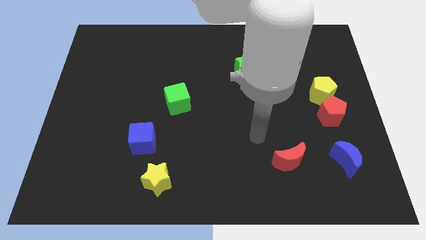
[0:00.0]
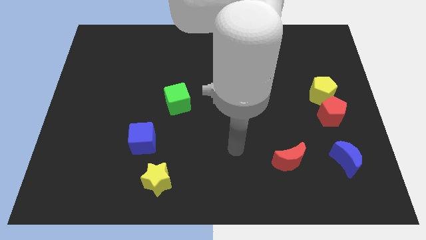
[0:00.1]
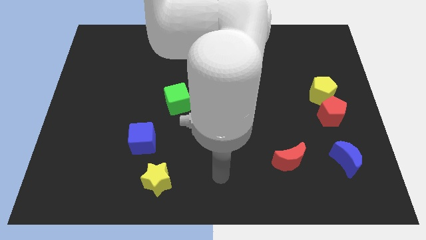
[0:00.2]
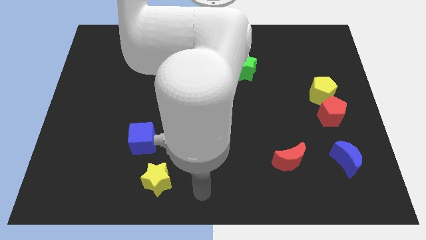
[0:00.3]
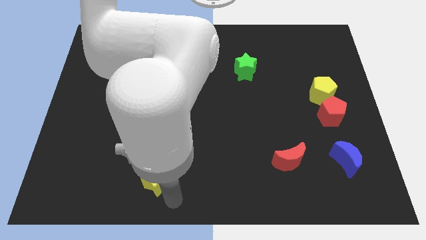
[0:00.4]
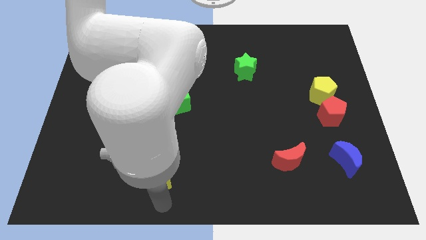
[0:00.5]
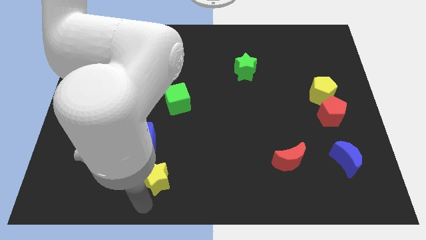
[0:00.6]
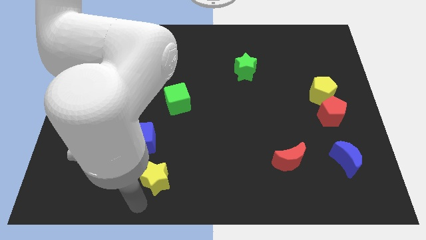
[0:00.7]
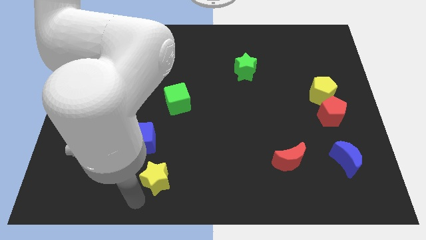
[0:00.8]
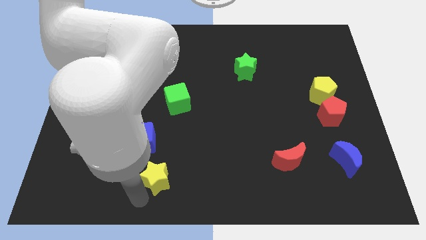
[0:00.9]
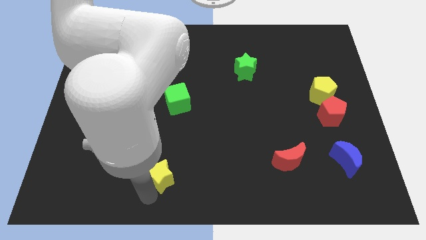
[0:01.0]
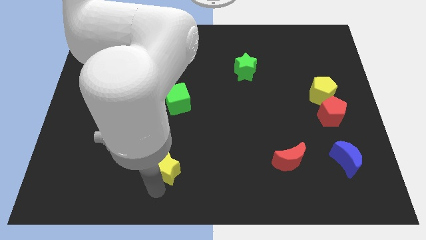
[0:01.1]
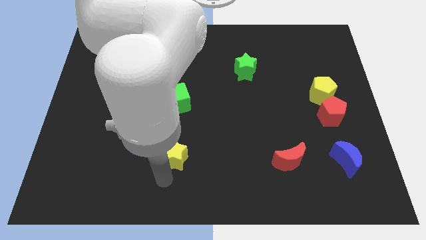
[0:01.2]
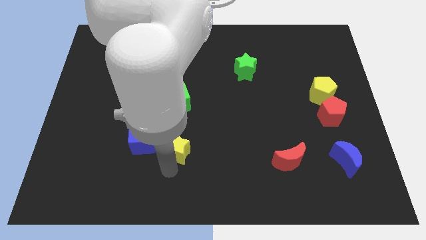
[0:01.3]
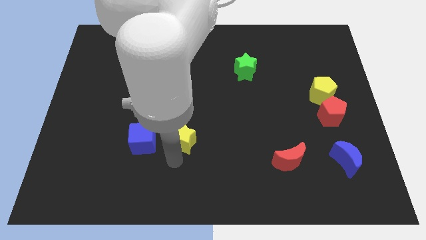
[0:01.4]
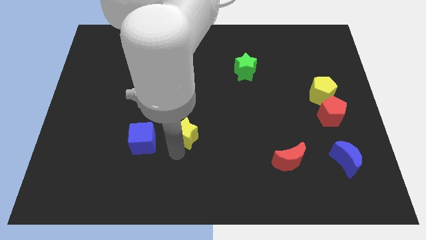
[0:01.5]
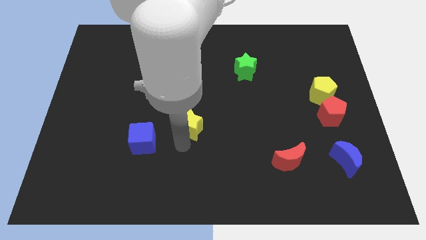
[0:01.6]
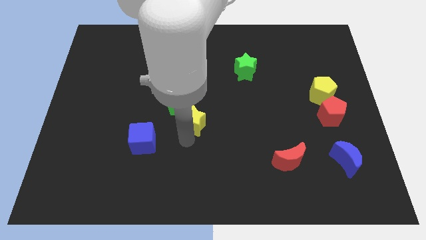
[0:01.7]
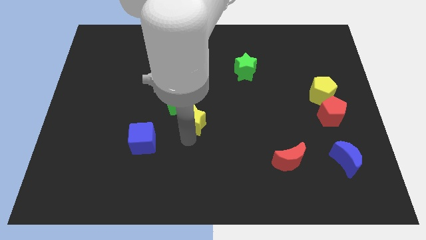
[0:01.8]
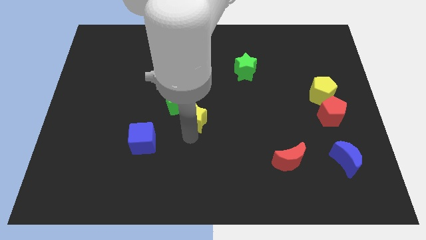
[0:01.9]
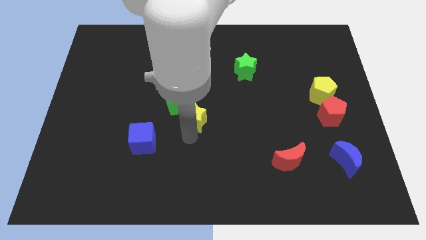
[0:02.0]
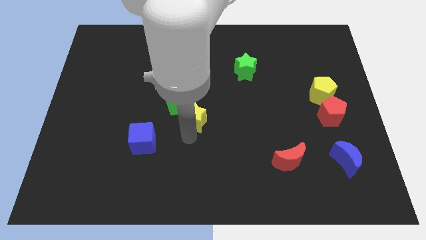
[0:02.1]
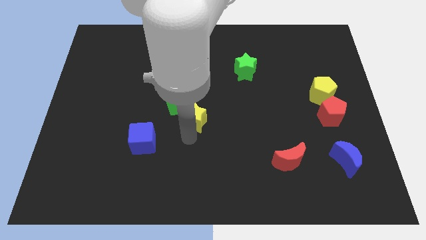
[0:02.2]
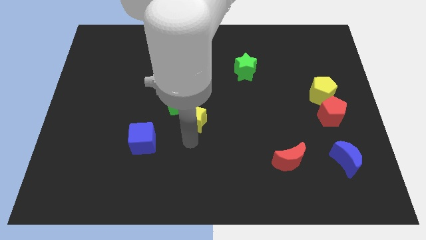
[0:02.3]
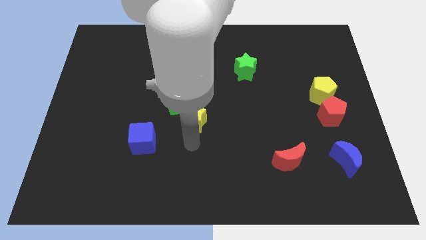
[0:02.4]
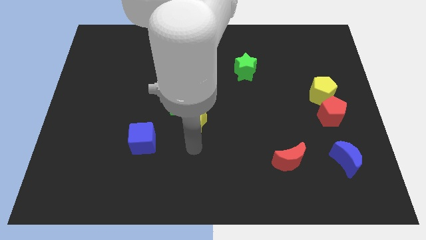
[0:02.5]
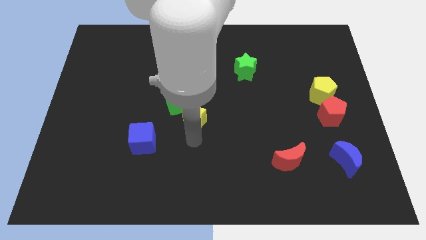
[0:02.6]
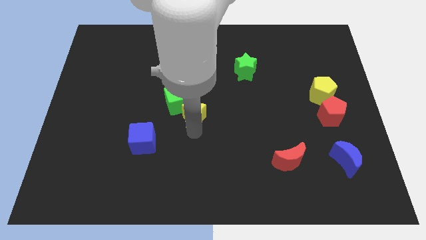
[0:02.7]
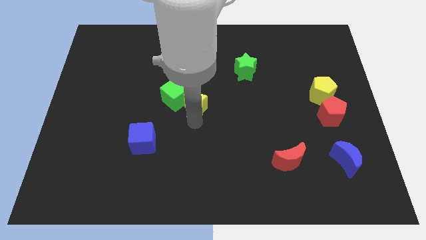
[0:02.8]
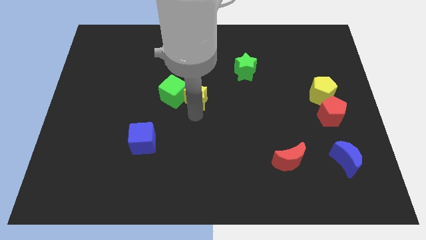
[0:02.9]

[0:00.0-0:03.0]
push the yellow star towards the green cube

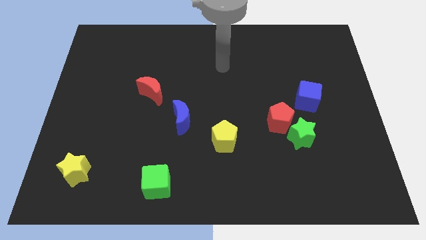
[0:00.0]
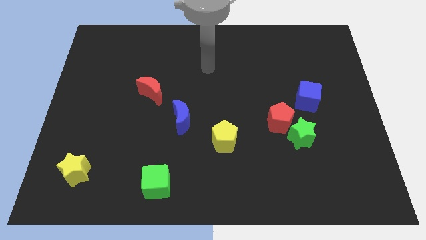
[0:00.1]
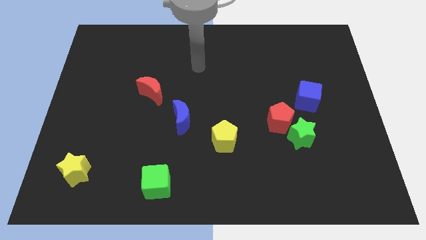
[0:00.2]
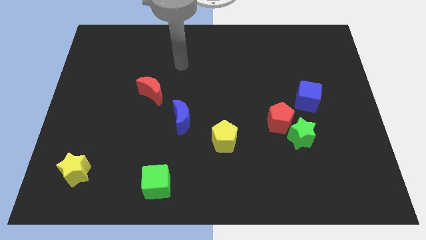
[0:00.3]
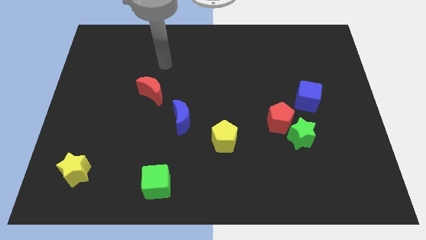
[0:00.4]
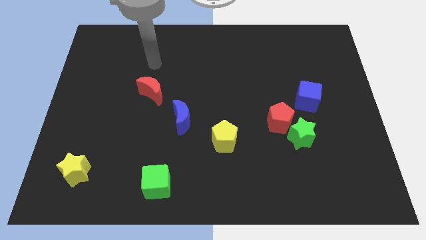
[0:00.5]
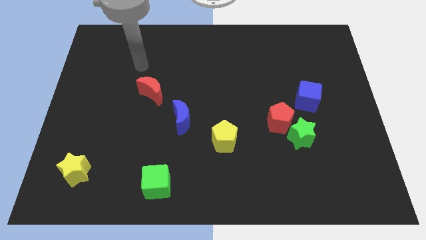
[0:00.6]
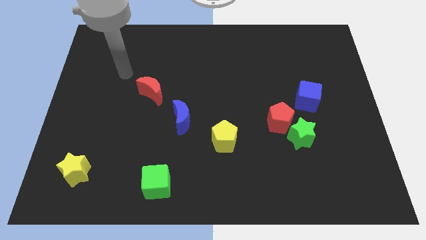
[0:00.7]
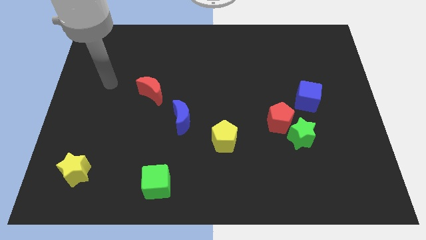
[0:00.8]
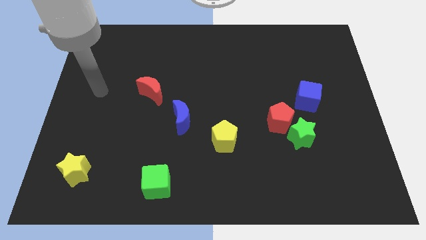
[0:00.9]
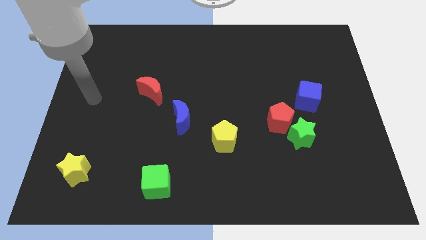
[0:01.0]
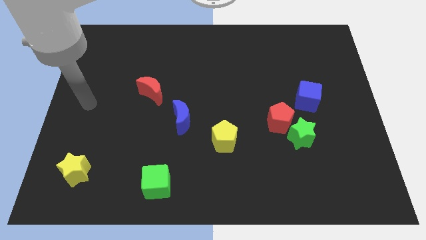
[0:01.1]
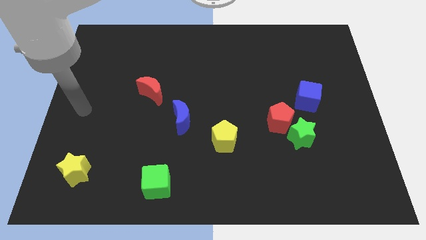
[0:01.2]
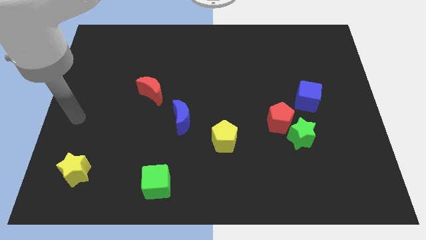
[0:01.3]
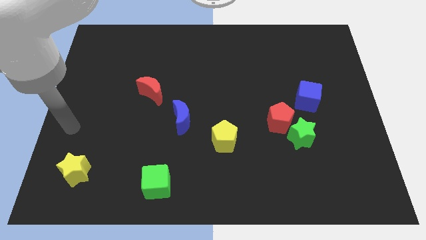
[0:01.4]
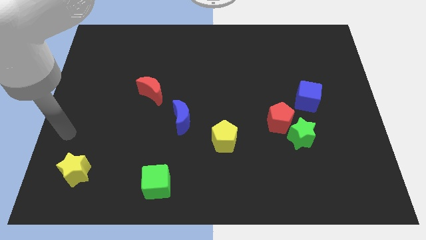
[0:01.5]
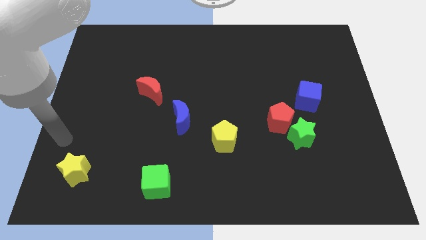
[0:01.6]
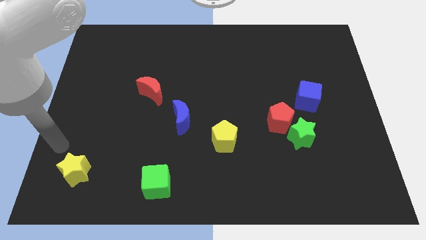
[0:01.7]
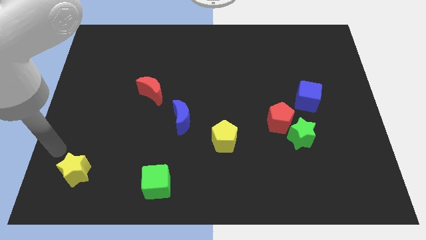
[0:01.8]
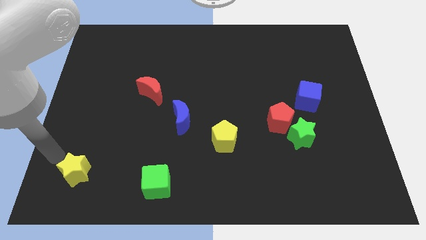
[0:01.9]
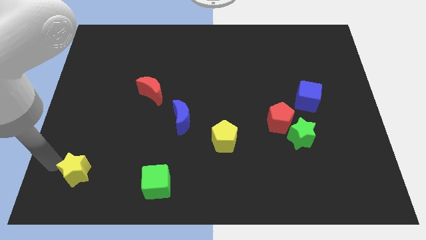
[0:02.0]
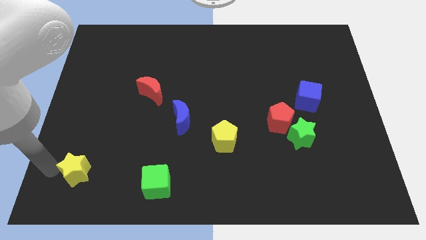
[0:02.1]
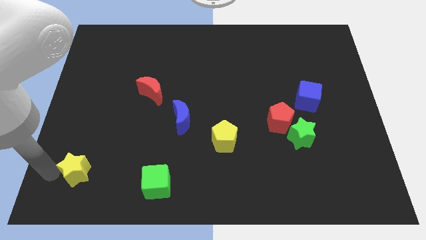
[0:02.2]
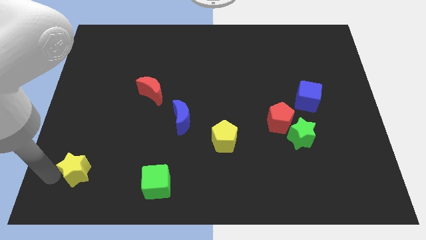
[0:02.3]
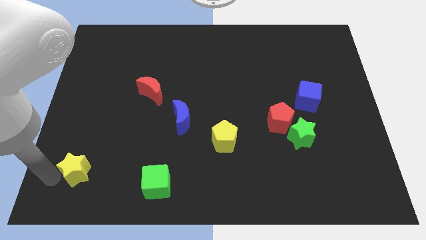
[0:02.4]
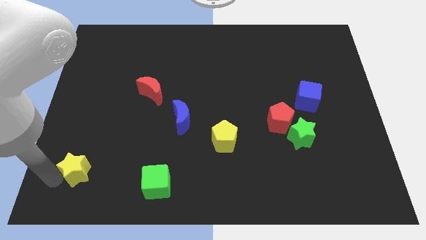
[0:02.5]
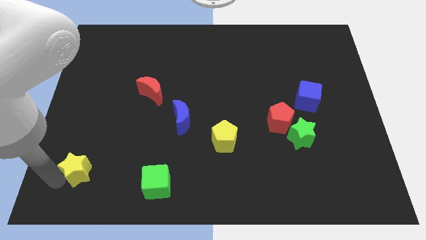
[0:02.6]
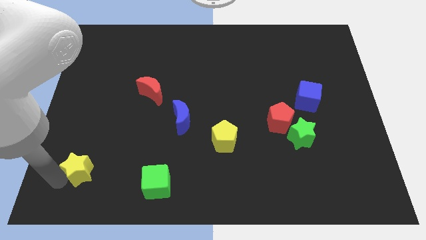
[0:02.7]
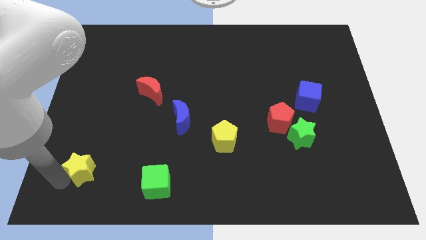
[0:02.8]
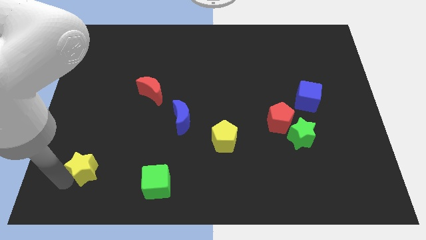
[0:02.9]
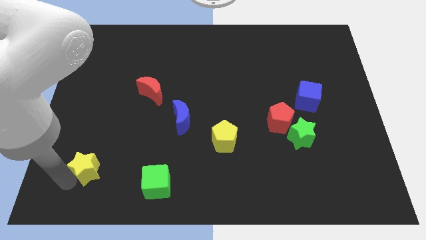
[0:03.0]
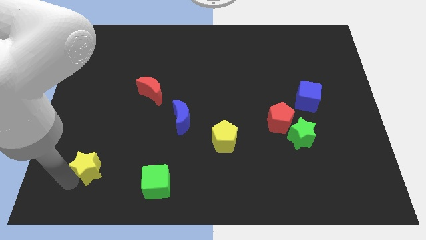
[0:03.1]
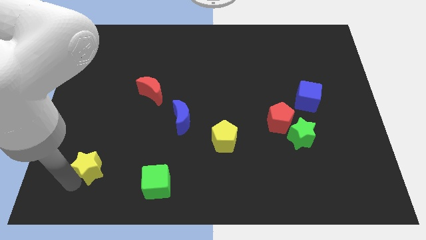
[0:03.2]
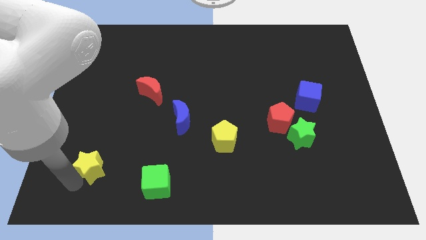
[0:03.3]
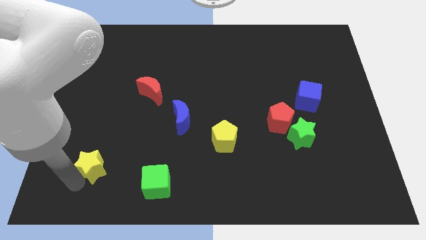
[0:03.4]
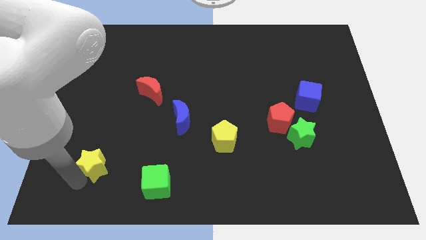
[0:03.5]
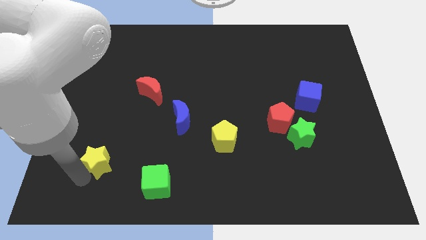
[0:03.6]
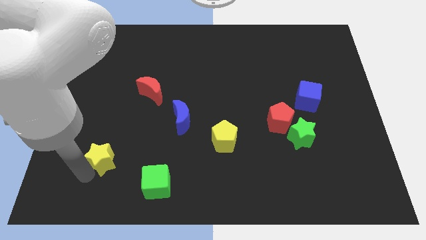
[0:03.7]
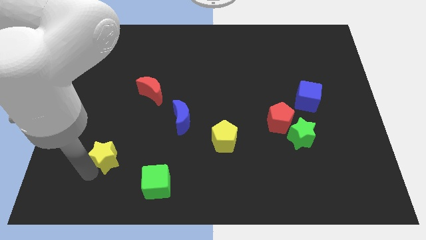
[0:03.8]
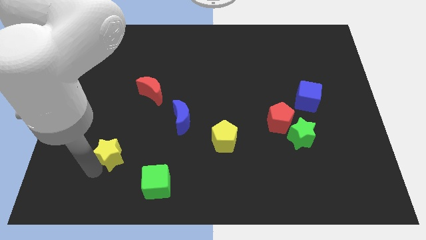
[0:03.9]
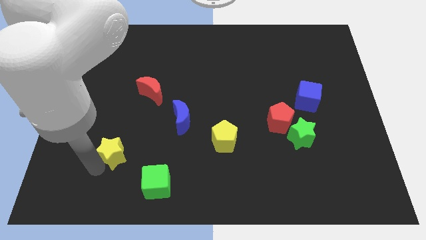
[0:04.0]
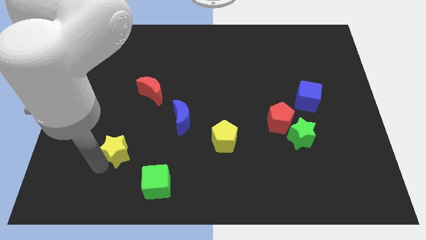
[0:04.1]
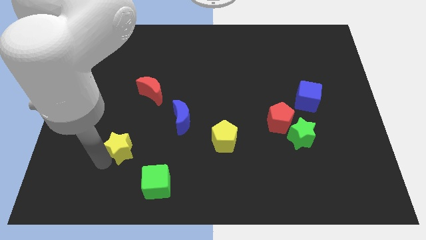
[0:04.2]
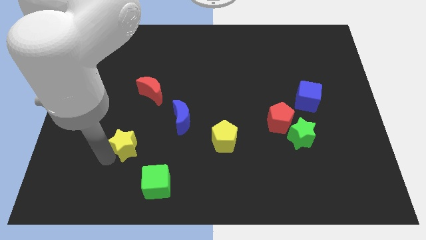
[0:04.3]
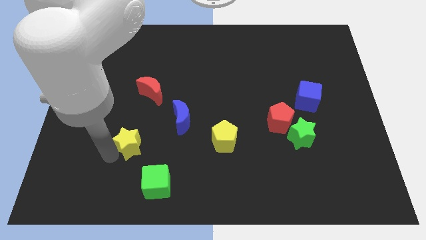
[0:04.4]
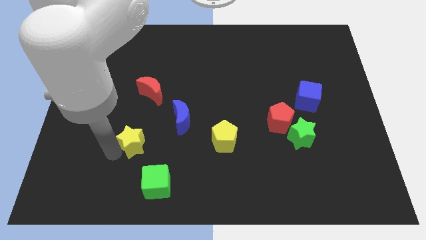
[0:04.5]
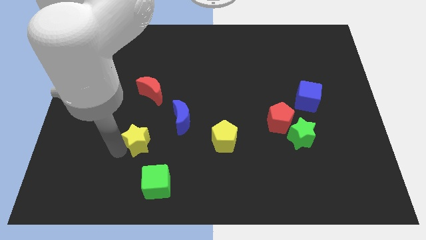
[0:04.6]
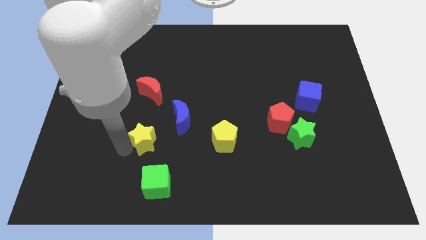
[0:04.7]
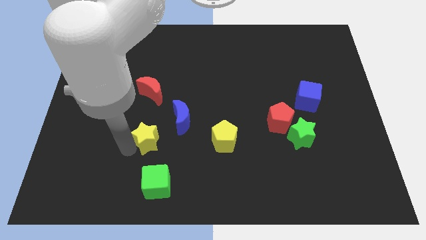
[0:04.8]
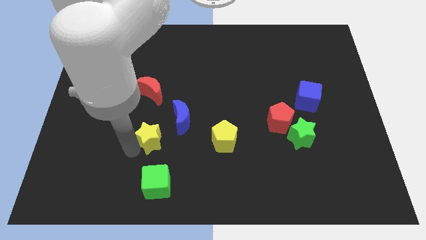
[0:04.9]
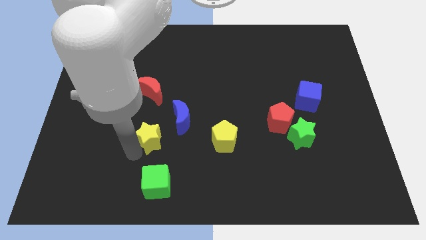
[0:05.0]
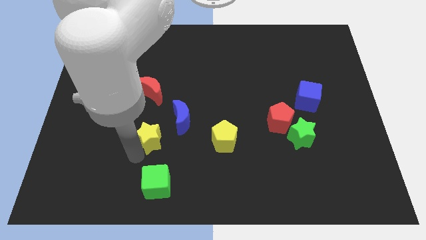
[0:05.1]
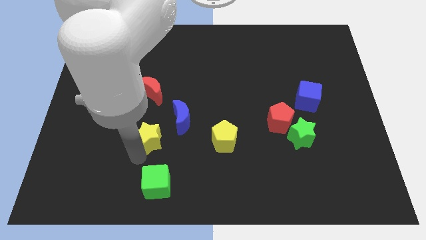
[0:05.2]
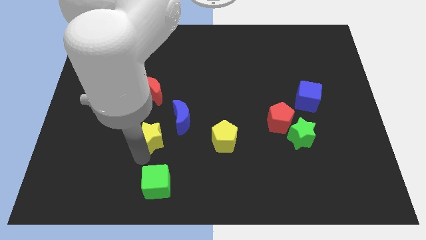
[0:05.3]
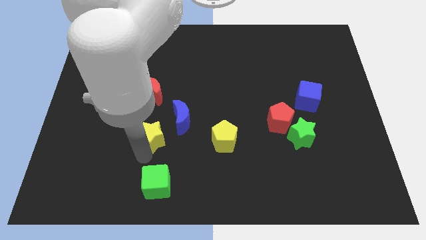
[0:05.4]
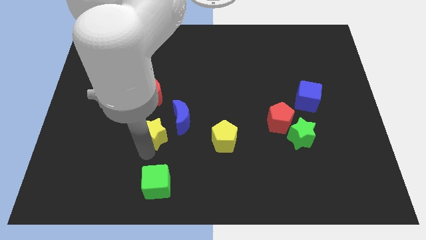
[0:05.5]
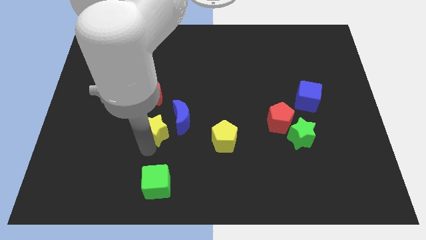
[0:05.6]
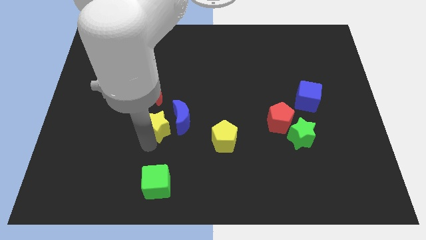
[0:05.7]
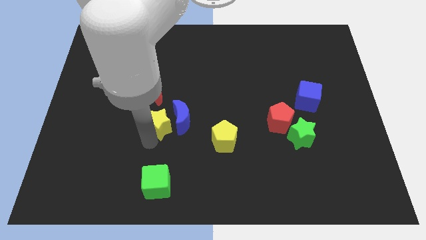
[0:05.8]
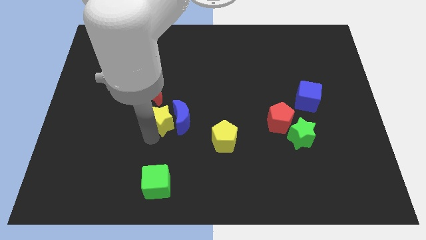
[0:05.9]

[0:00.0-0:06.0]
slide the yellow star towards the blue moon
